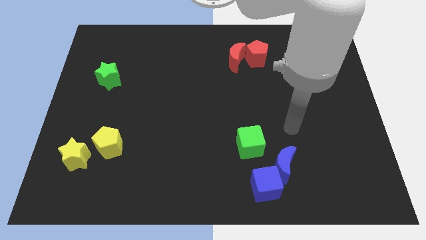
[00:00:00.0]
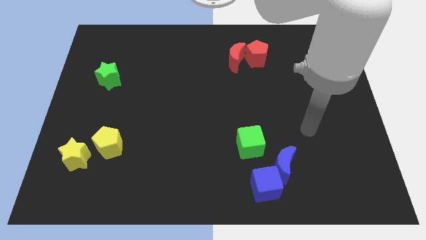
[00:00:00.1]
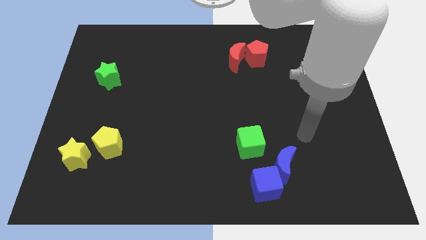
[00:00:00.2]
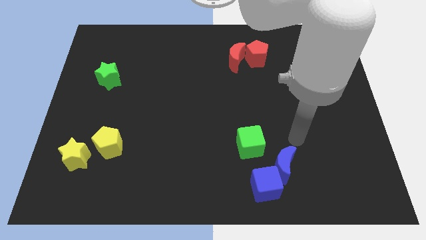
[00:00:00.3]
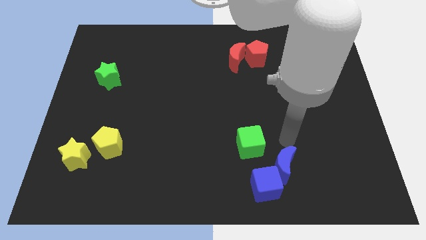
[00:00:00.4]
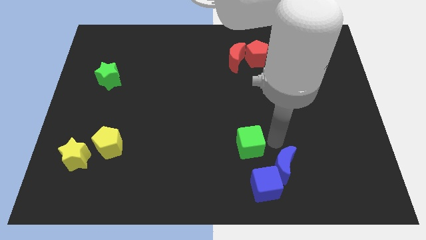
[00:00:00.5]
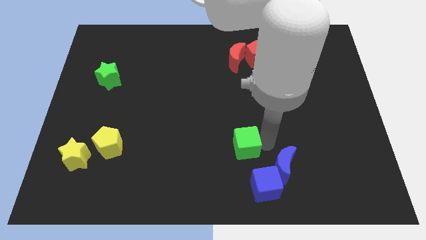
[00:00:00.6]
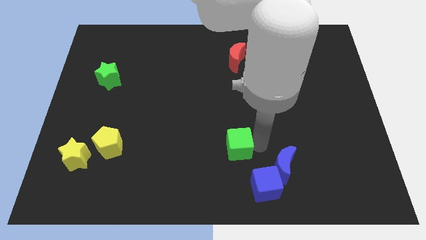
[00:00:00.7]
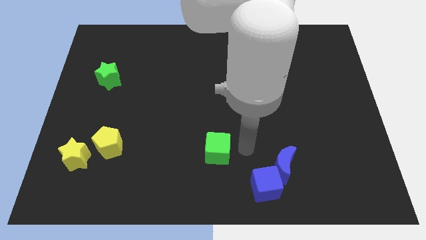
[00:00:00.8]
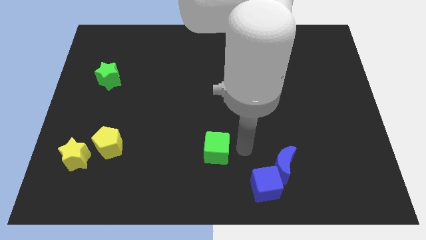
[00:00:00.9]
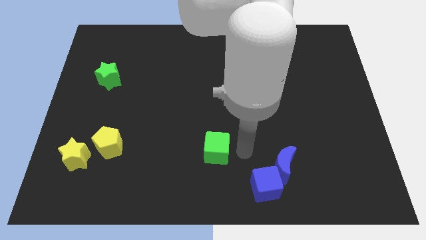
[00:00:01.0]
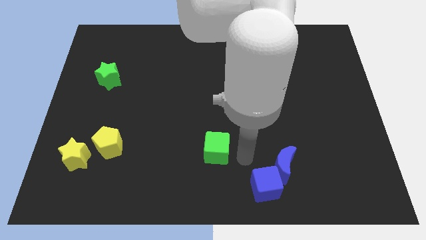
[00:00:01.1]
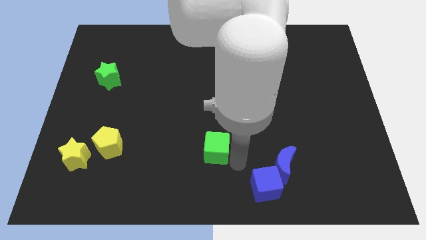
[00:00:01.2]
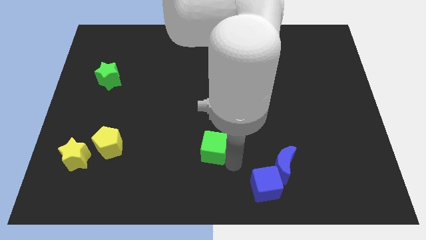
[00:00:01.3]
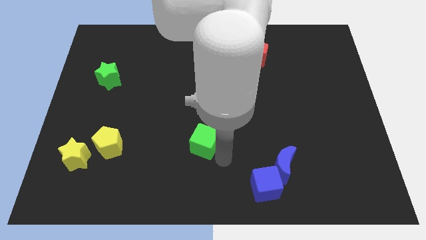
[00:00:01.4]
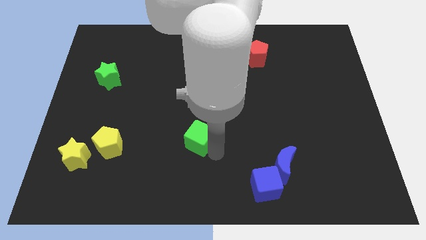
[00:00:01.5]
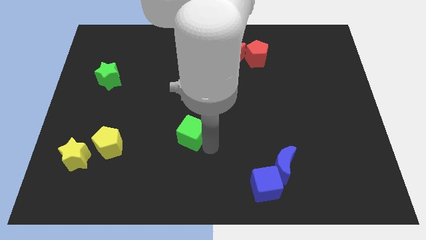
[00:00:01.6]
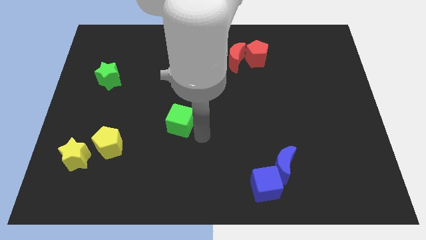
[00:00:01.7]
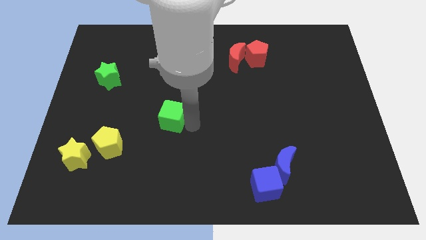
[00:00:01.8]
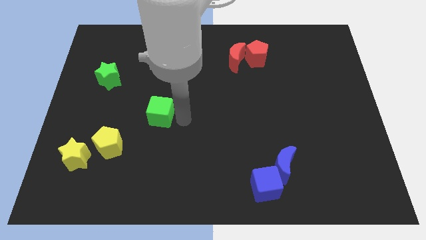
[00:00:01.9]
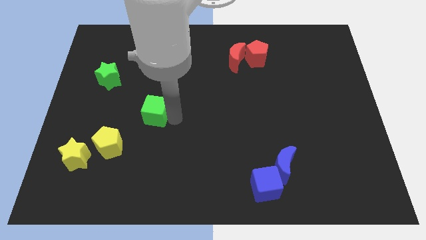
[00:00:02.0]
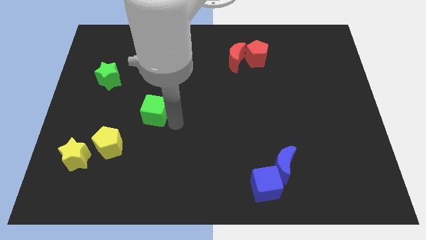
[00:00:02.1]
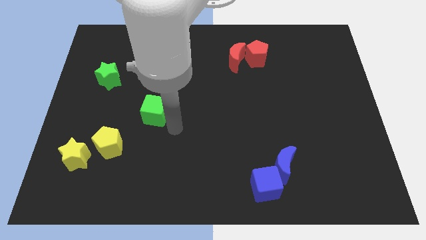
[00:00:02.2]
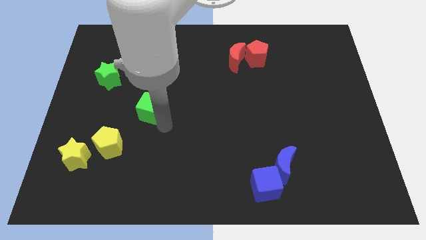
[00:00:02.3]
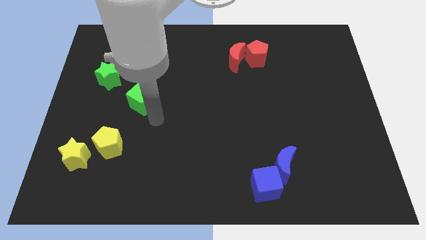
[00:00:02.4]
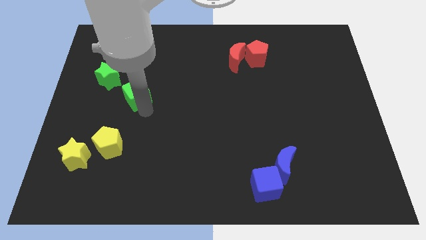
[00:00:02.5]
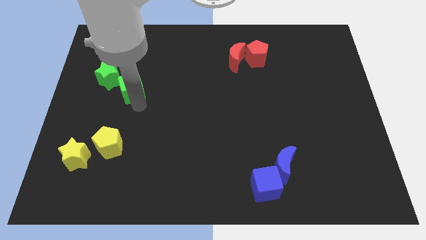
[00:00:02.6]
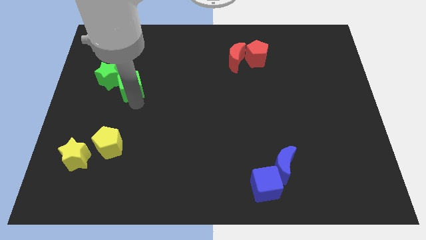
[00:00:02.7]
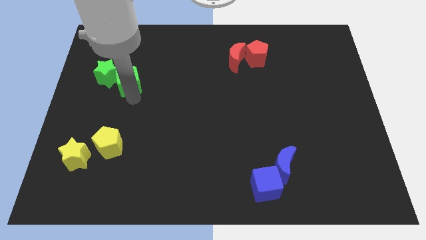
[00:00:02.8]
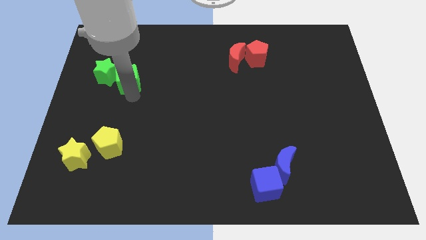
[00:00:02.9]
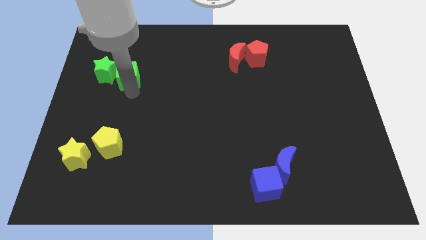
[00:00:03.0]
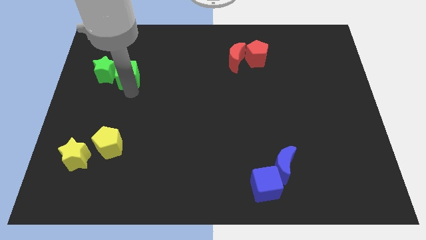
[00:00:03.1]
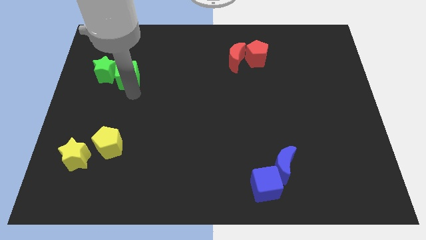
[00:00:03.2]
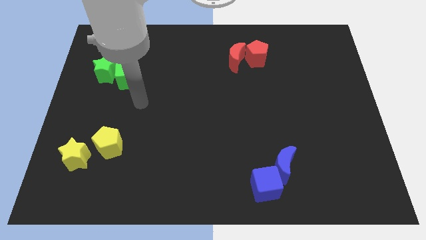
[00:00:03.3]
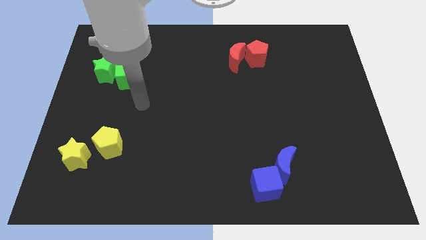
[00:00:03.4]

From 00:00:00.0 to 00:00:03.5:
push green cube in to green star

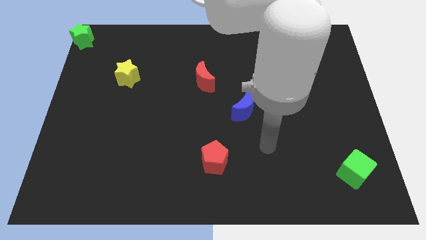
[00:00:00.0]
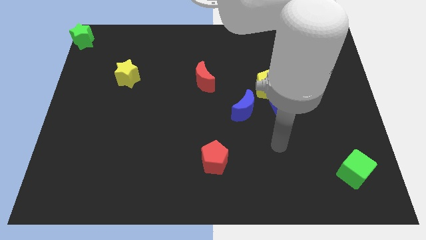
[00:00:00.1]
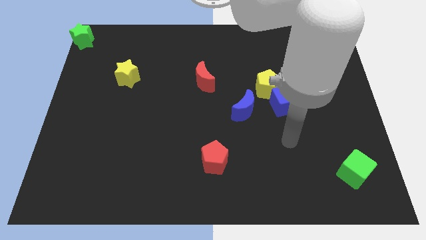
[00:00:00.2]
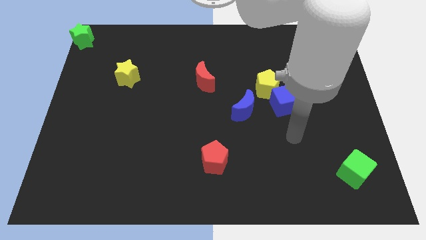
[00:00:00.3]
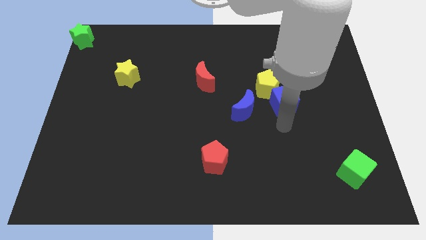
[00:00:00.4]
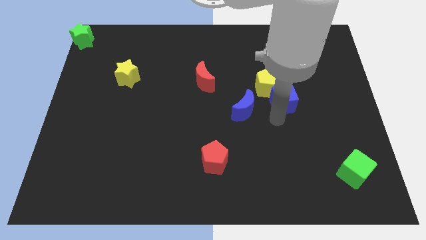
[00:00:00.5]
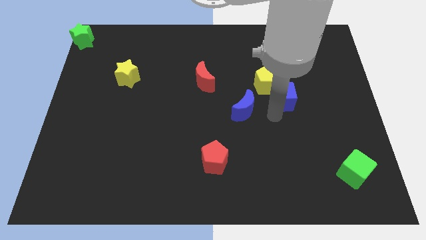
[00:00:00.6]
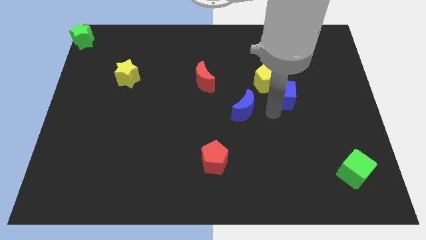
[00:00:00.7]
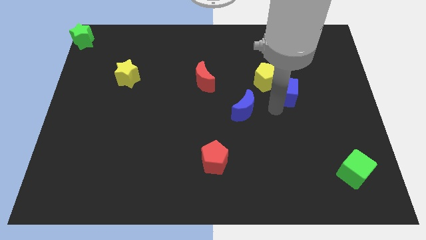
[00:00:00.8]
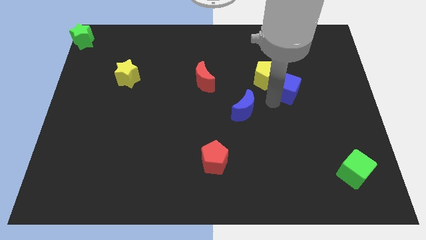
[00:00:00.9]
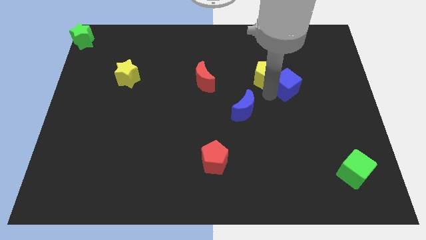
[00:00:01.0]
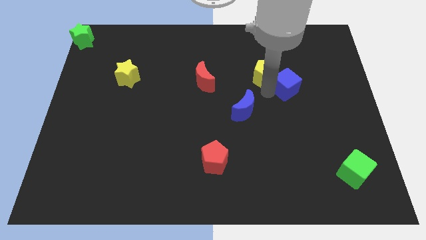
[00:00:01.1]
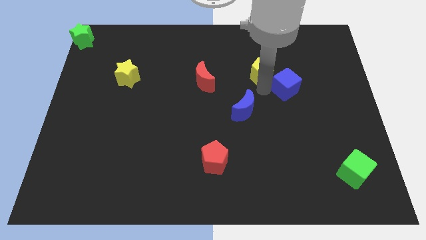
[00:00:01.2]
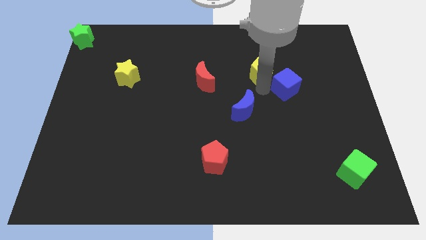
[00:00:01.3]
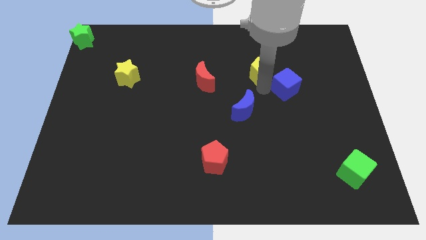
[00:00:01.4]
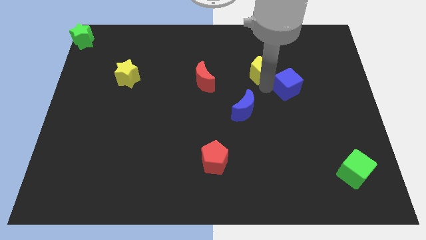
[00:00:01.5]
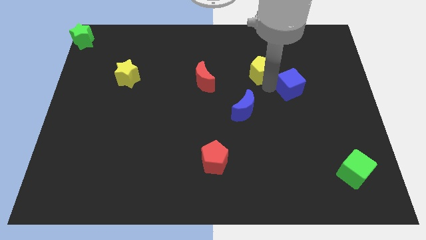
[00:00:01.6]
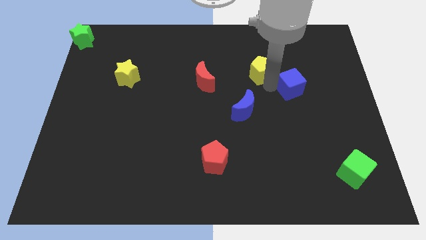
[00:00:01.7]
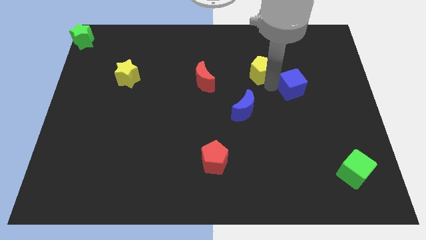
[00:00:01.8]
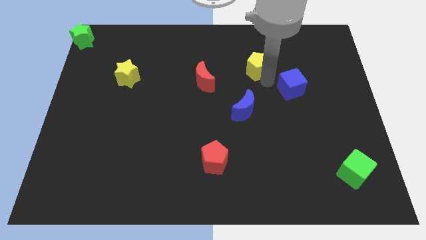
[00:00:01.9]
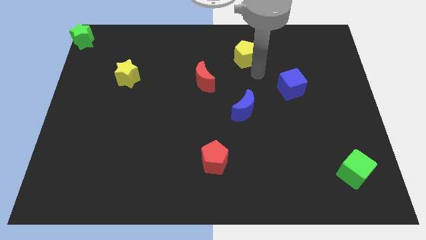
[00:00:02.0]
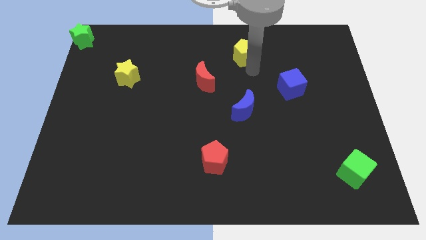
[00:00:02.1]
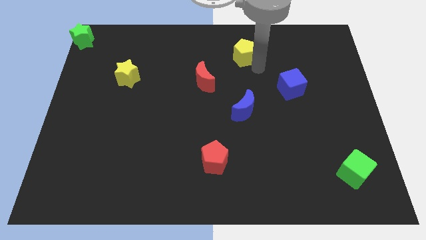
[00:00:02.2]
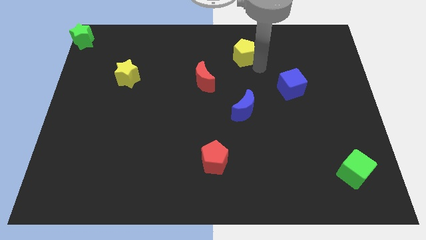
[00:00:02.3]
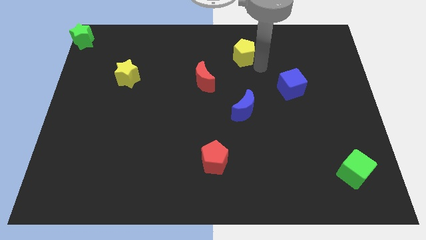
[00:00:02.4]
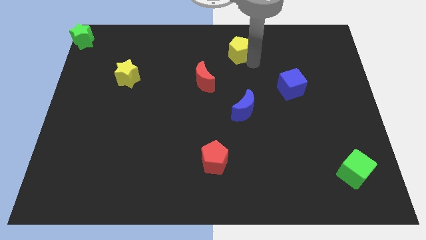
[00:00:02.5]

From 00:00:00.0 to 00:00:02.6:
separate the yellow pentagon and the blue cube

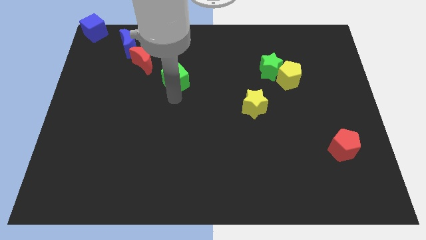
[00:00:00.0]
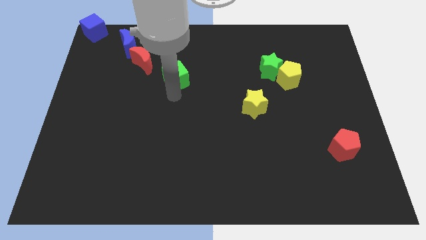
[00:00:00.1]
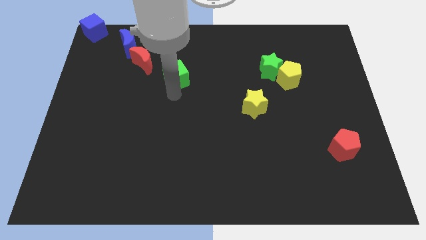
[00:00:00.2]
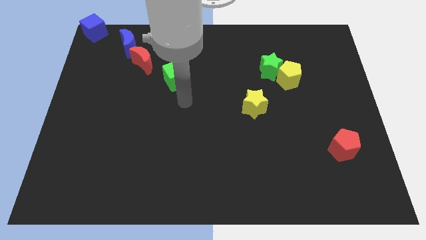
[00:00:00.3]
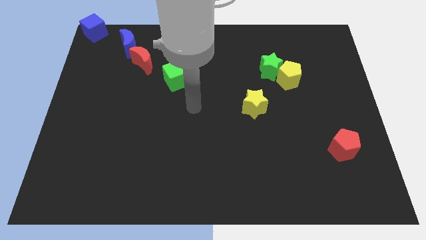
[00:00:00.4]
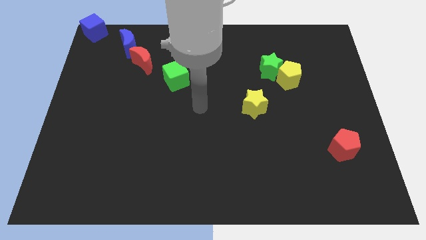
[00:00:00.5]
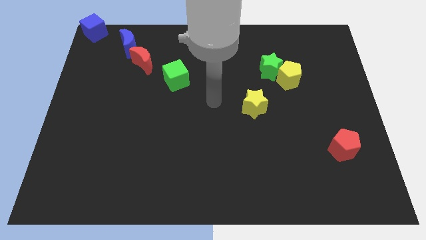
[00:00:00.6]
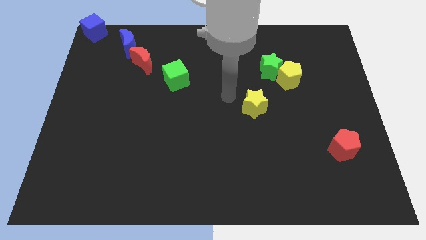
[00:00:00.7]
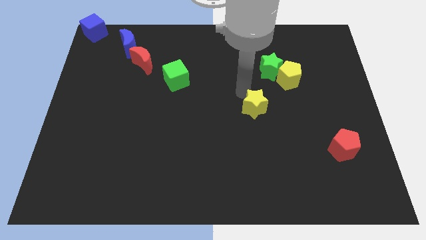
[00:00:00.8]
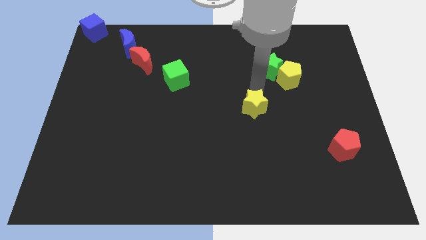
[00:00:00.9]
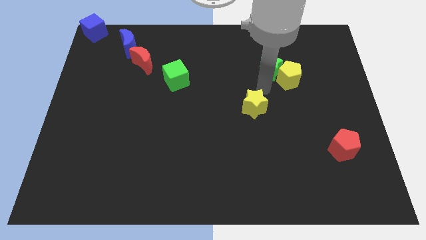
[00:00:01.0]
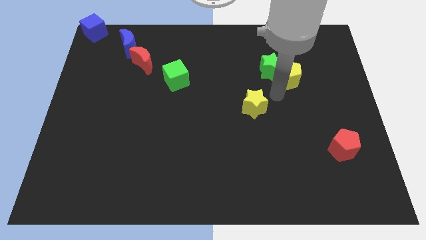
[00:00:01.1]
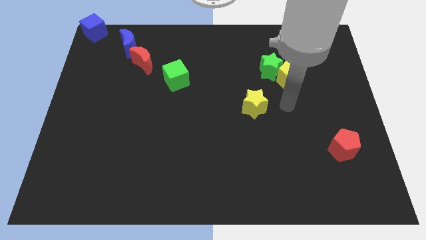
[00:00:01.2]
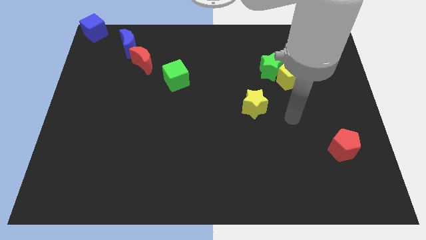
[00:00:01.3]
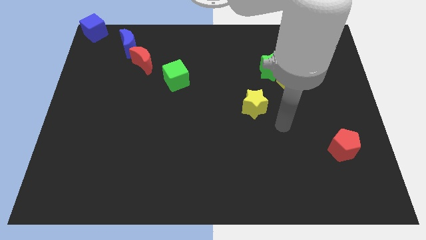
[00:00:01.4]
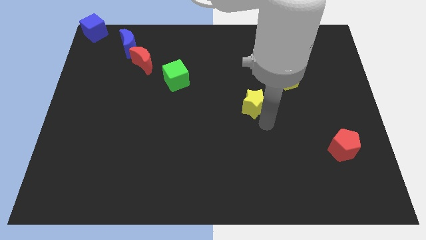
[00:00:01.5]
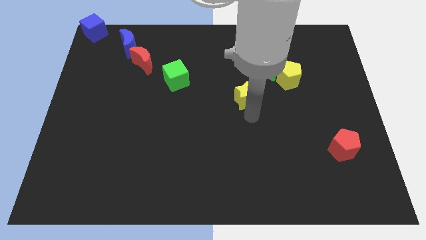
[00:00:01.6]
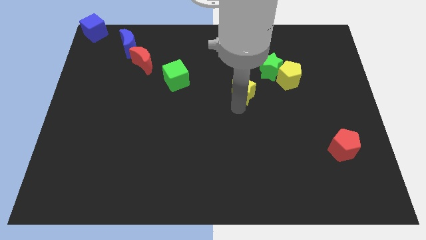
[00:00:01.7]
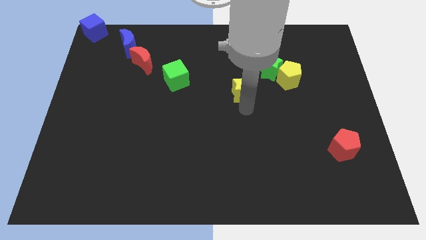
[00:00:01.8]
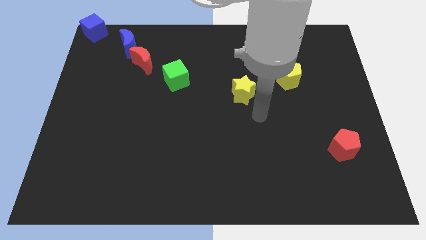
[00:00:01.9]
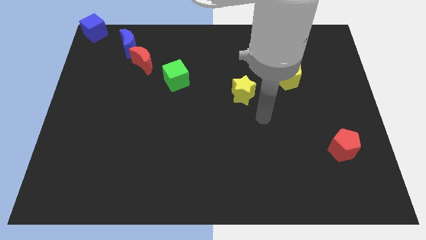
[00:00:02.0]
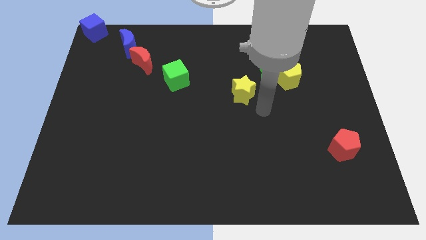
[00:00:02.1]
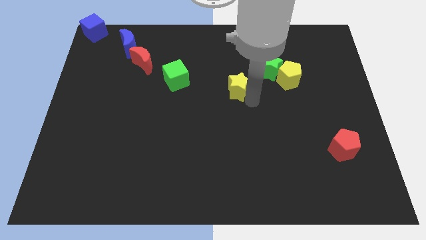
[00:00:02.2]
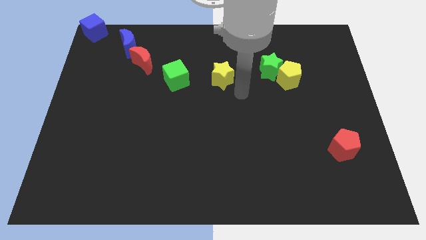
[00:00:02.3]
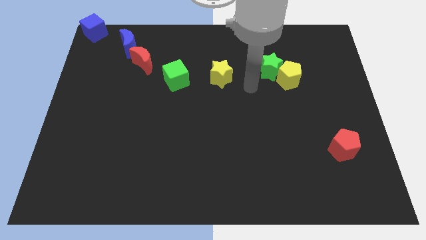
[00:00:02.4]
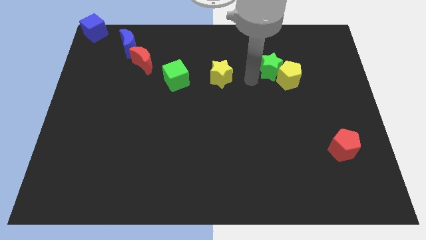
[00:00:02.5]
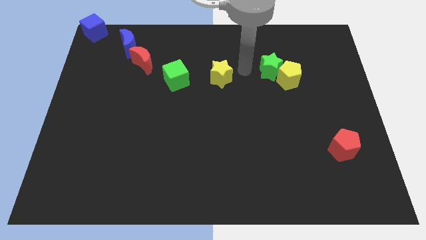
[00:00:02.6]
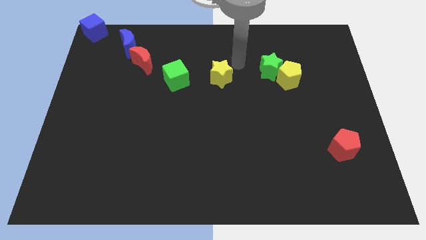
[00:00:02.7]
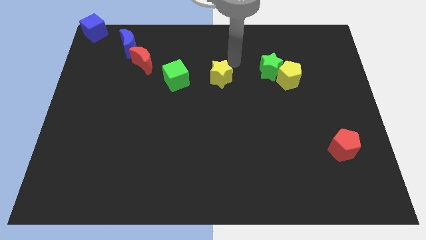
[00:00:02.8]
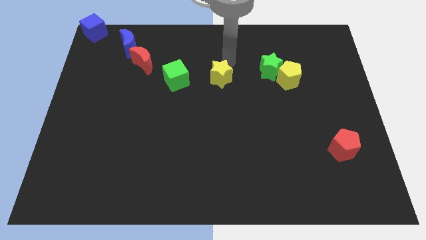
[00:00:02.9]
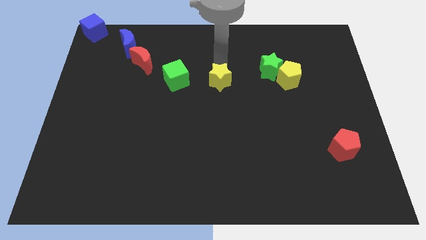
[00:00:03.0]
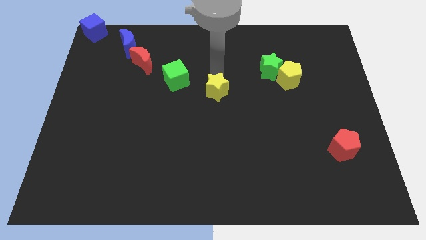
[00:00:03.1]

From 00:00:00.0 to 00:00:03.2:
move the green cube and yellow star towards top side
